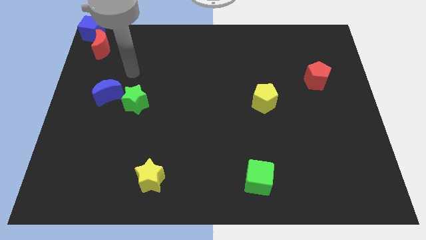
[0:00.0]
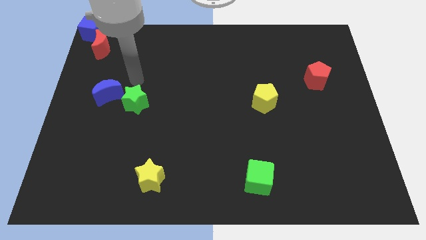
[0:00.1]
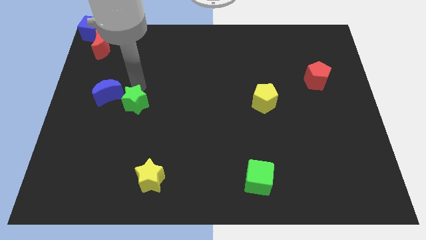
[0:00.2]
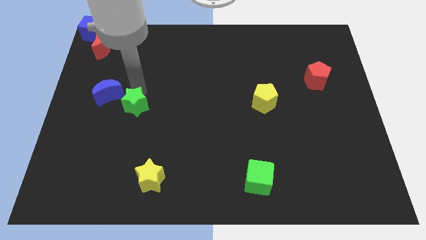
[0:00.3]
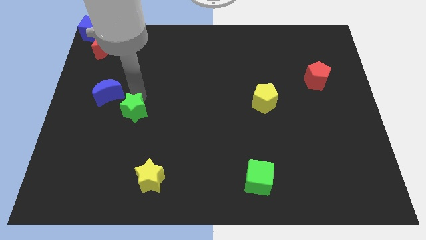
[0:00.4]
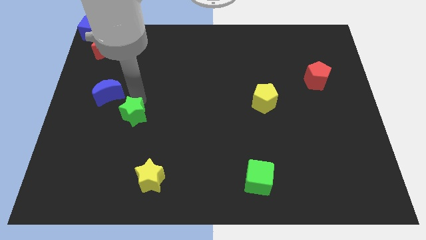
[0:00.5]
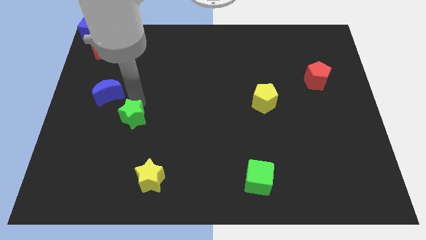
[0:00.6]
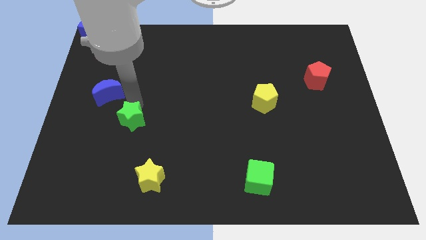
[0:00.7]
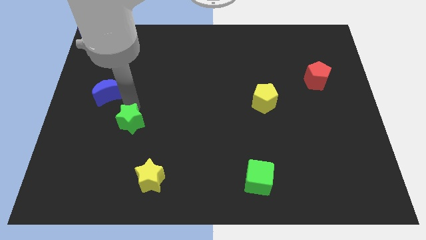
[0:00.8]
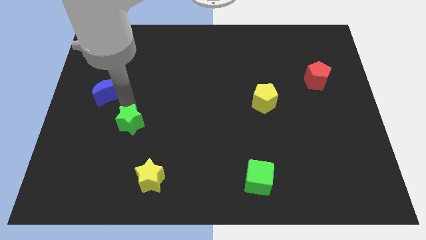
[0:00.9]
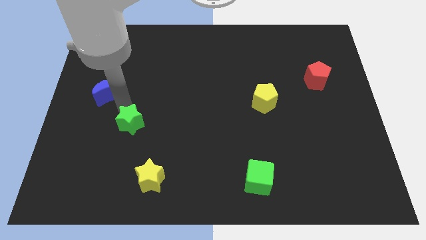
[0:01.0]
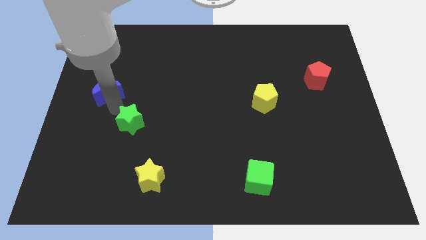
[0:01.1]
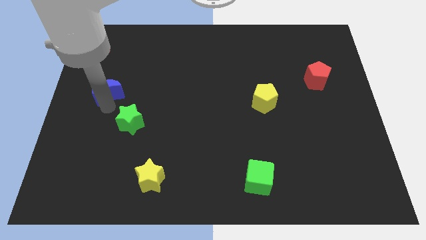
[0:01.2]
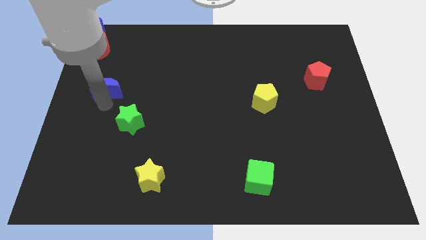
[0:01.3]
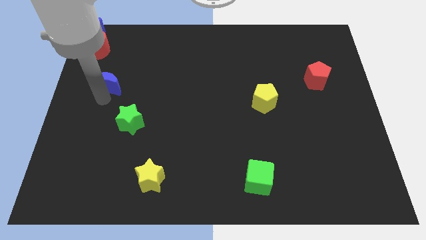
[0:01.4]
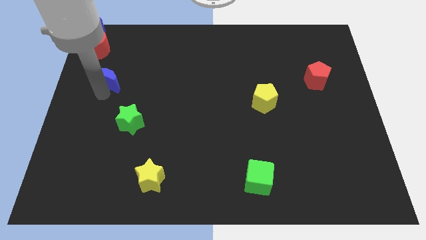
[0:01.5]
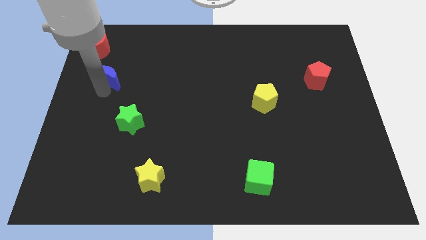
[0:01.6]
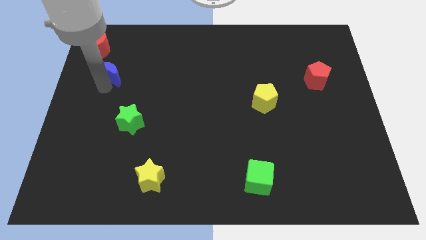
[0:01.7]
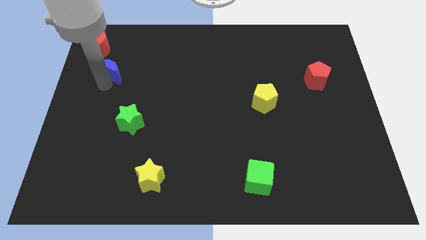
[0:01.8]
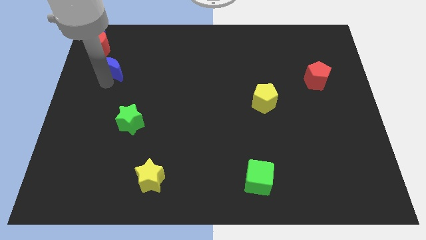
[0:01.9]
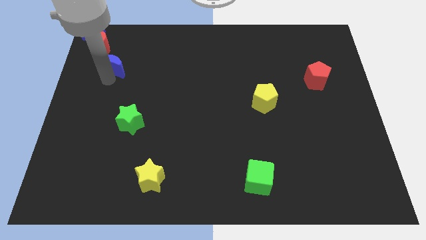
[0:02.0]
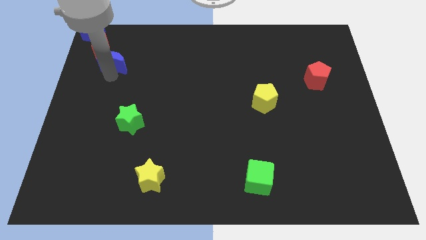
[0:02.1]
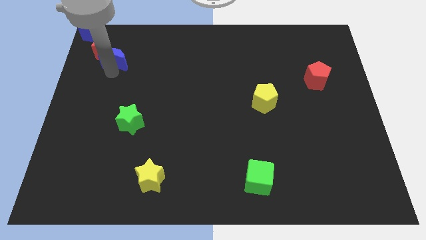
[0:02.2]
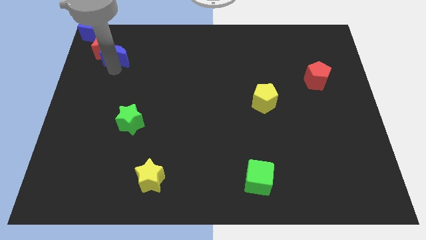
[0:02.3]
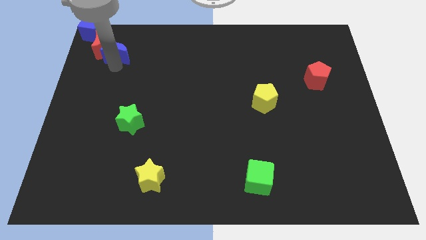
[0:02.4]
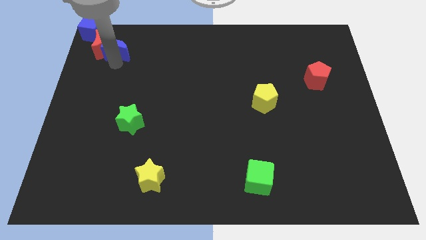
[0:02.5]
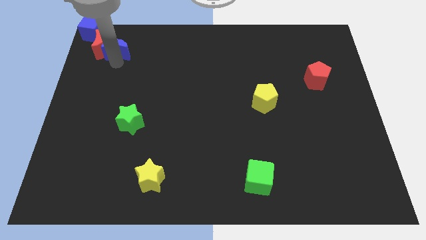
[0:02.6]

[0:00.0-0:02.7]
push the blue moon close to the red moon

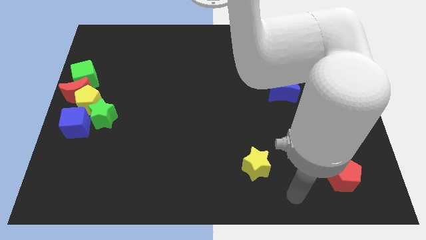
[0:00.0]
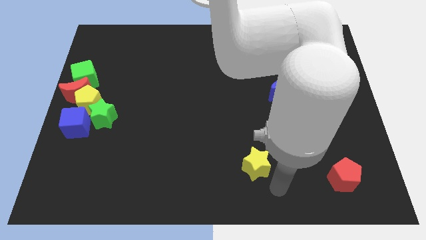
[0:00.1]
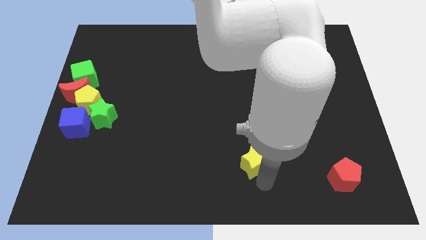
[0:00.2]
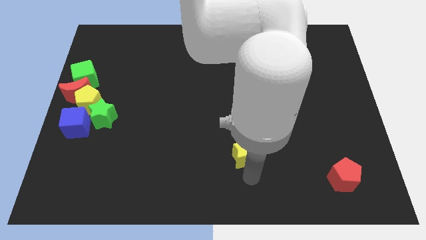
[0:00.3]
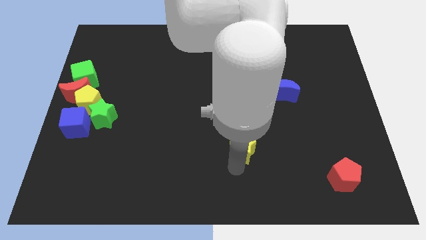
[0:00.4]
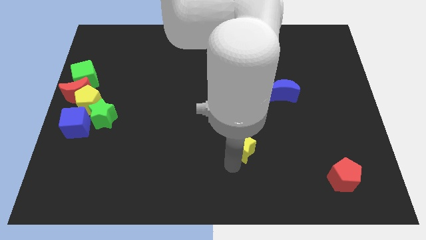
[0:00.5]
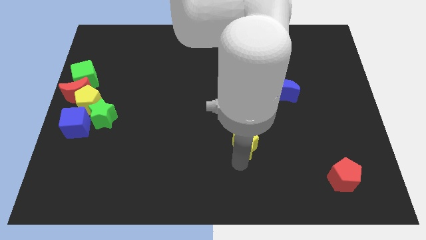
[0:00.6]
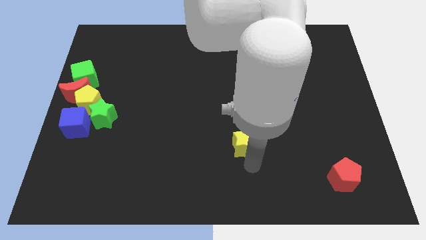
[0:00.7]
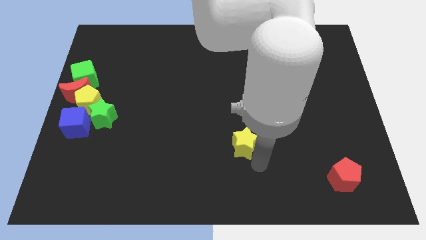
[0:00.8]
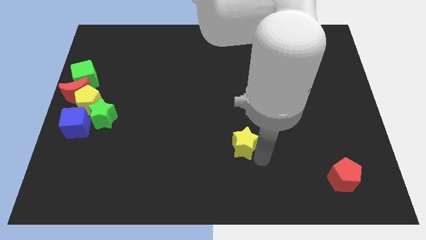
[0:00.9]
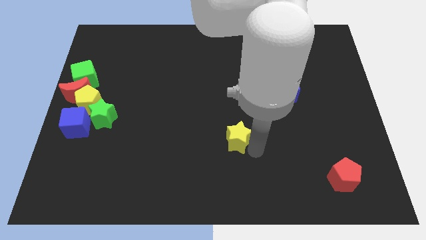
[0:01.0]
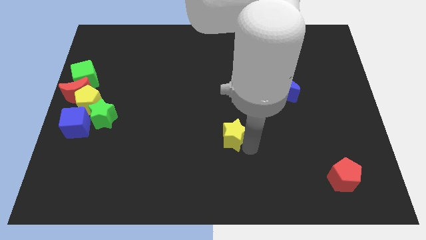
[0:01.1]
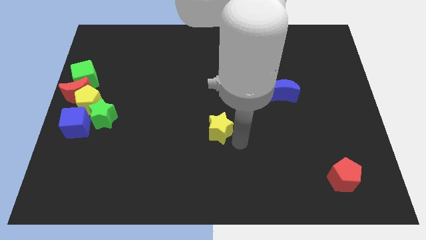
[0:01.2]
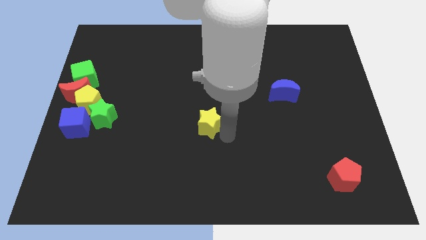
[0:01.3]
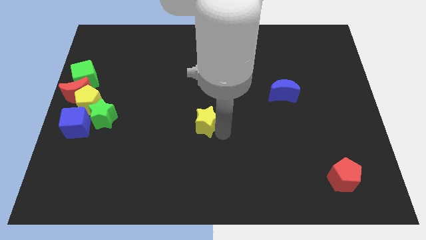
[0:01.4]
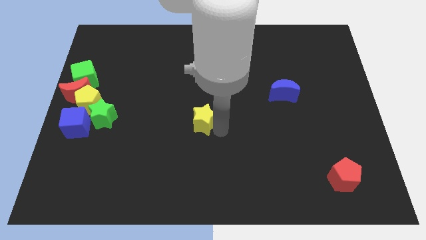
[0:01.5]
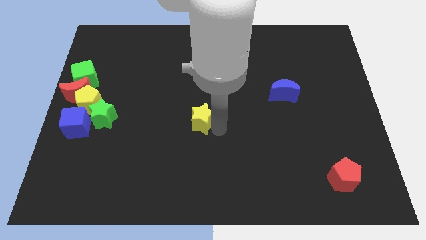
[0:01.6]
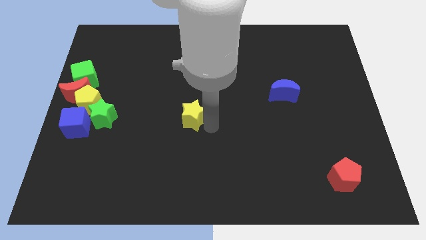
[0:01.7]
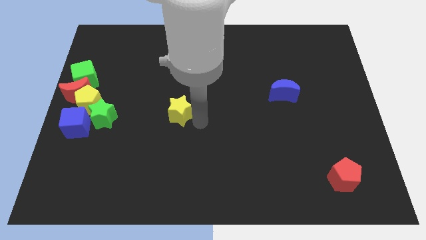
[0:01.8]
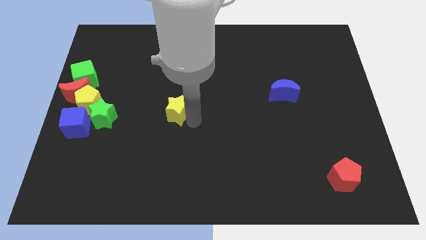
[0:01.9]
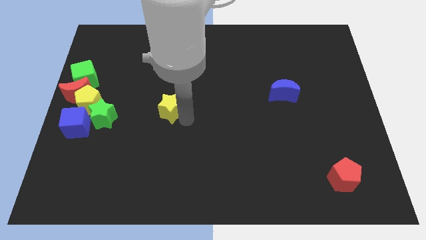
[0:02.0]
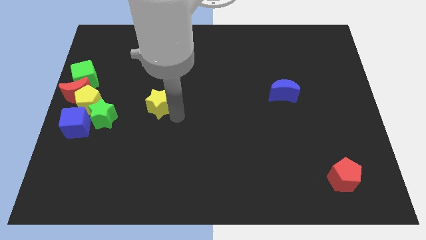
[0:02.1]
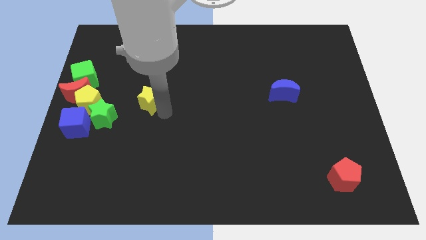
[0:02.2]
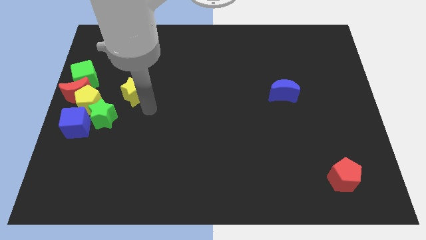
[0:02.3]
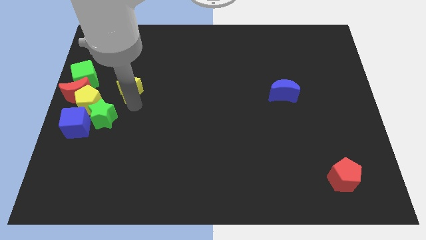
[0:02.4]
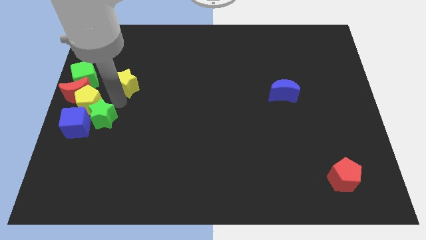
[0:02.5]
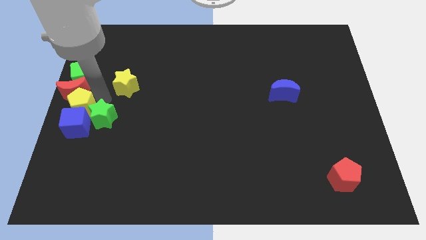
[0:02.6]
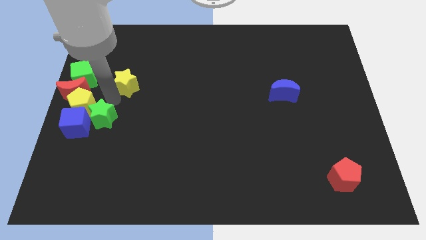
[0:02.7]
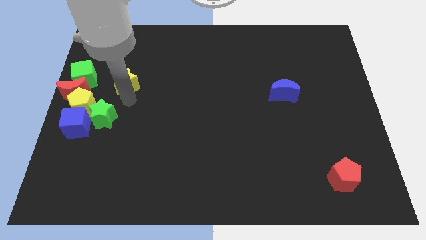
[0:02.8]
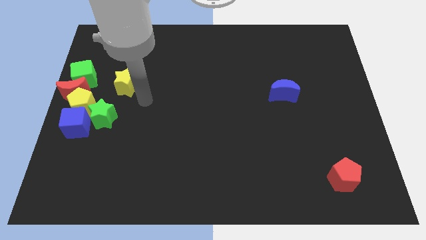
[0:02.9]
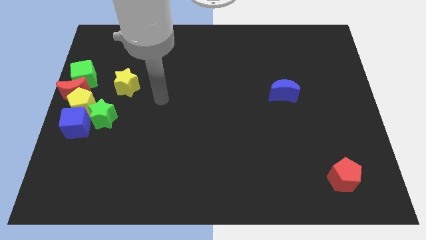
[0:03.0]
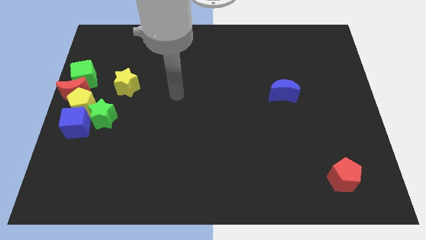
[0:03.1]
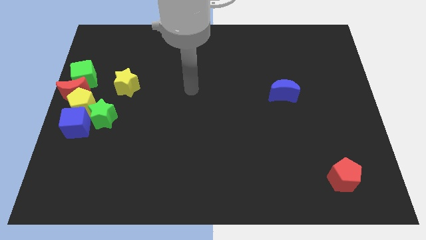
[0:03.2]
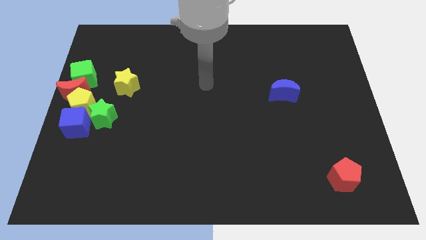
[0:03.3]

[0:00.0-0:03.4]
place yellow star to the top right of green star

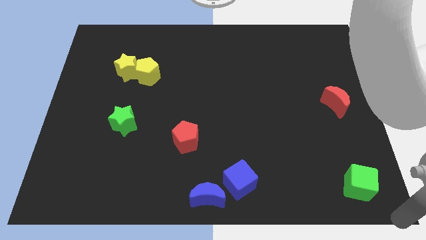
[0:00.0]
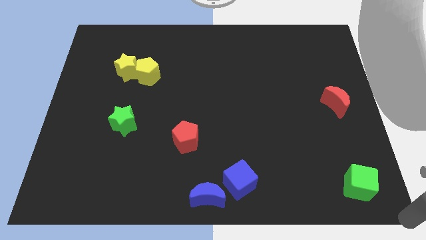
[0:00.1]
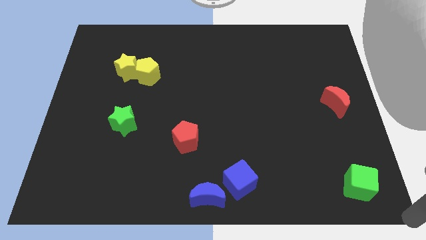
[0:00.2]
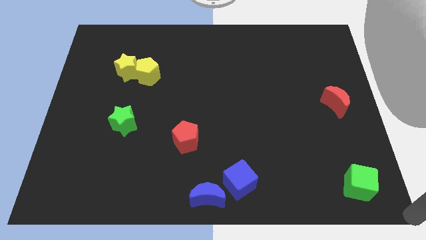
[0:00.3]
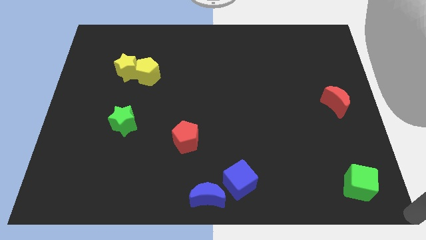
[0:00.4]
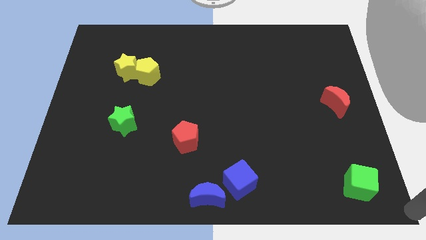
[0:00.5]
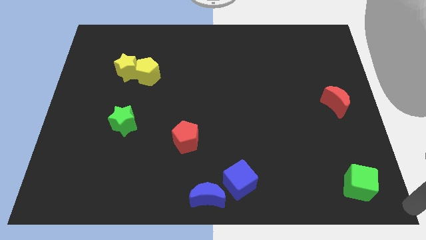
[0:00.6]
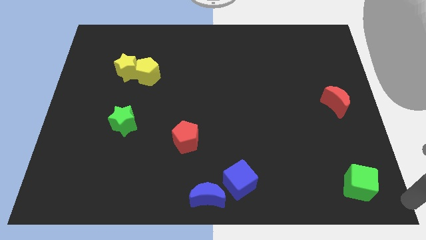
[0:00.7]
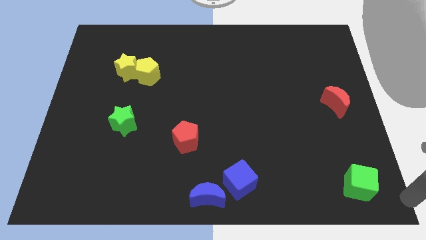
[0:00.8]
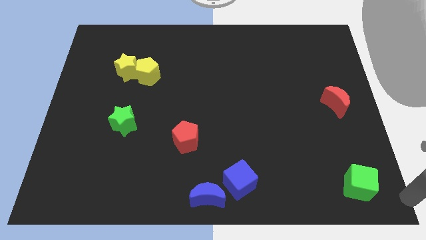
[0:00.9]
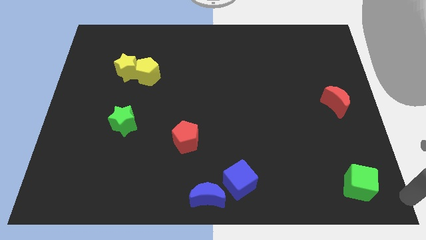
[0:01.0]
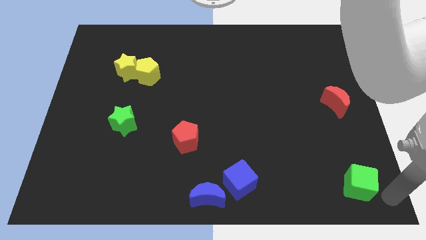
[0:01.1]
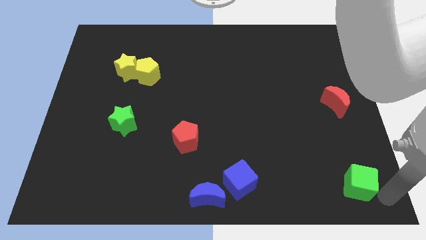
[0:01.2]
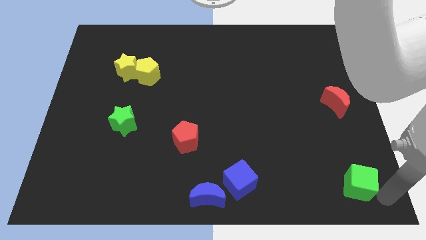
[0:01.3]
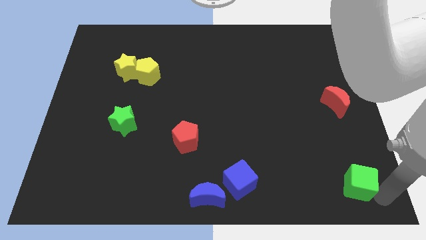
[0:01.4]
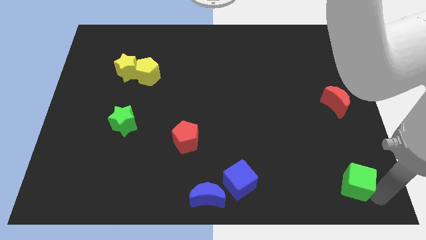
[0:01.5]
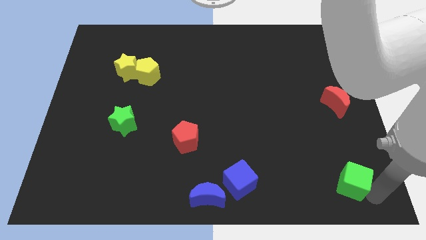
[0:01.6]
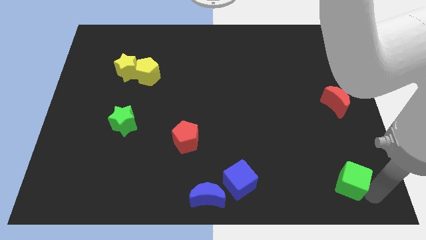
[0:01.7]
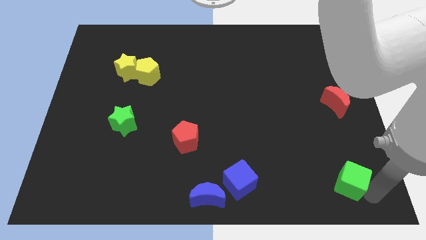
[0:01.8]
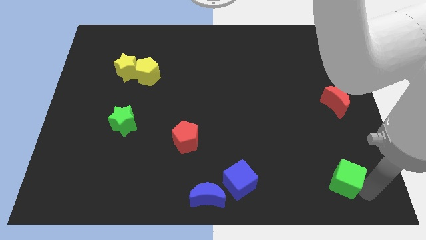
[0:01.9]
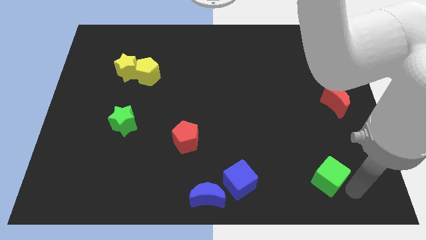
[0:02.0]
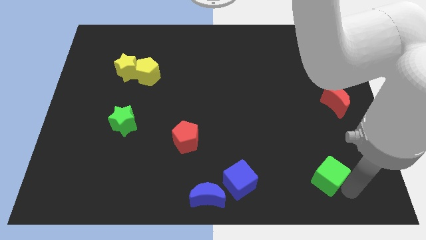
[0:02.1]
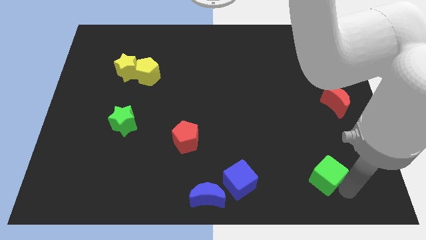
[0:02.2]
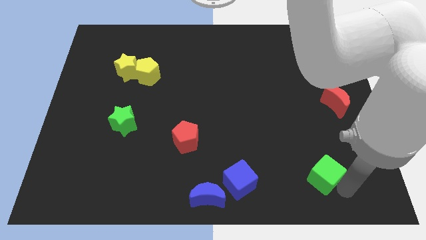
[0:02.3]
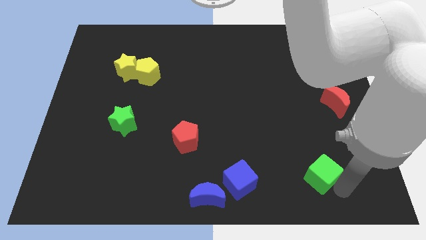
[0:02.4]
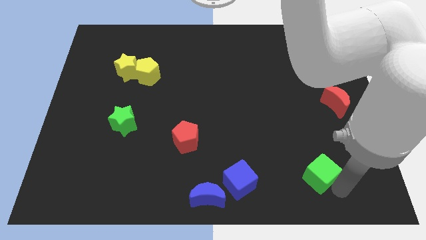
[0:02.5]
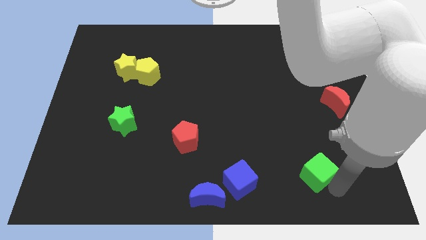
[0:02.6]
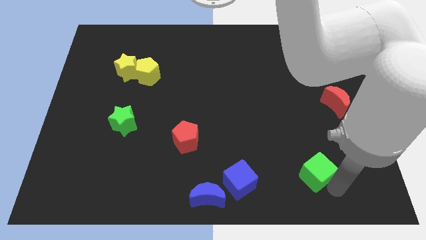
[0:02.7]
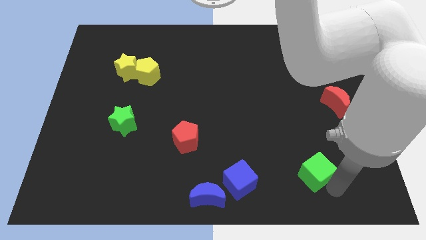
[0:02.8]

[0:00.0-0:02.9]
push the green cube towards the blue cube

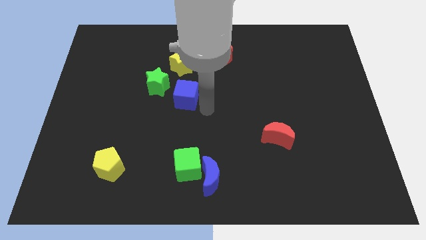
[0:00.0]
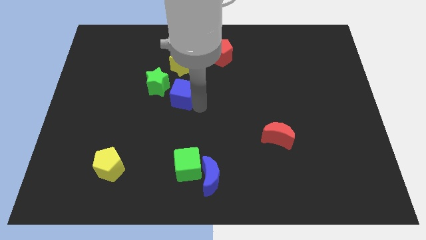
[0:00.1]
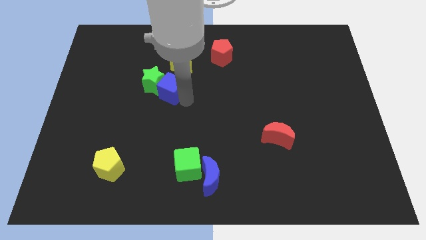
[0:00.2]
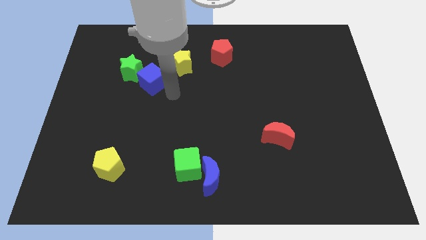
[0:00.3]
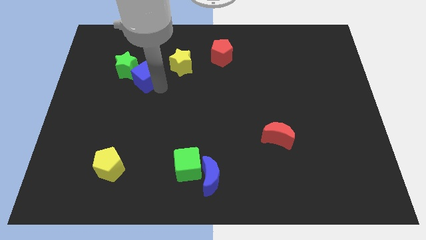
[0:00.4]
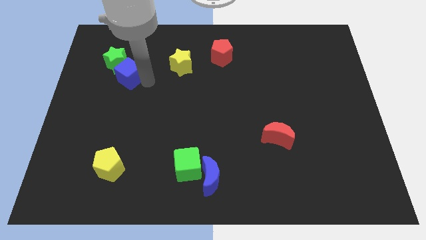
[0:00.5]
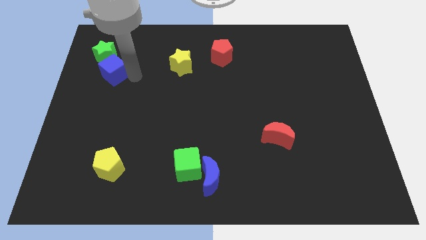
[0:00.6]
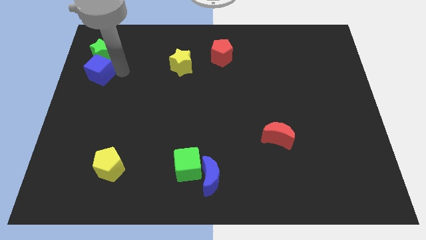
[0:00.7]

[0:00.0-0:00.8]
move the green star and blue cube towards the left side of the board
